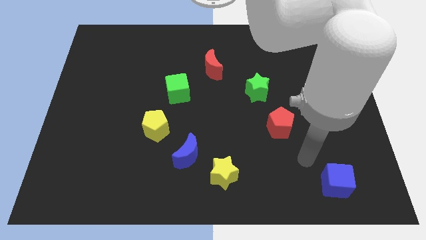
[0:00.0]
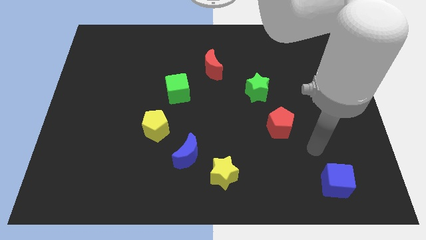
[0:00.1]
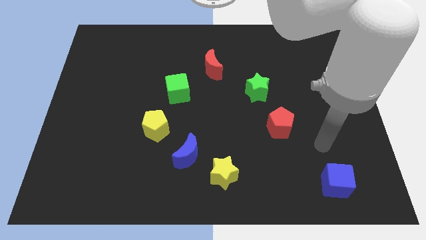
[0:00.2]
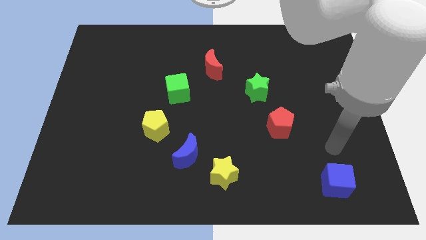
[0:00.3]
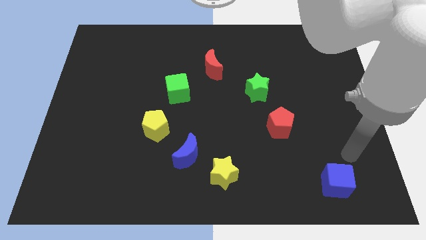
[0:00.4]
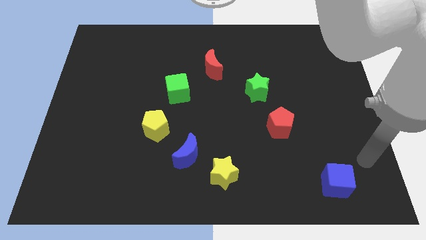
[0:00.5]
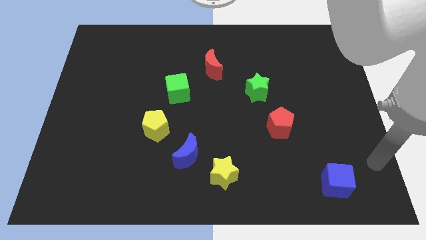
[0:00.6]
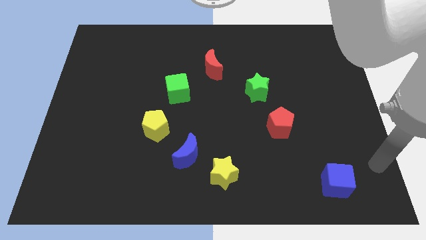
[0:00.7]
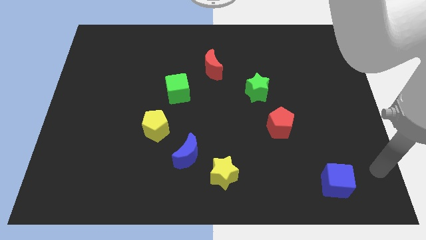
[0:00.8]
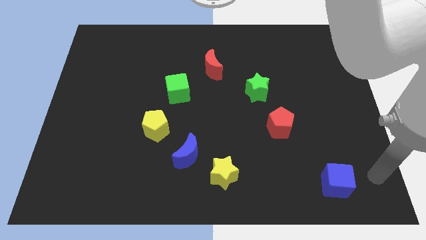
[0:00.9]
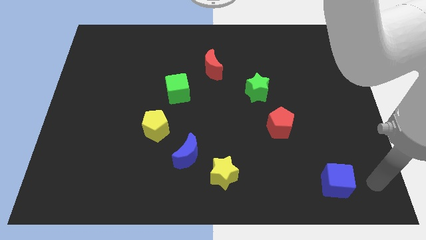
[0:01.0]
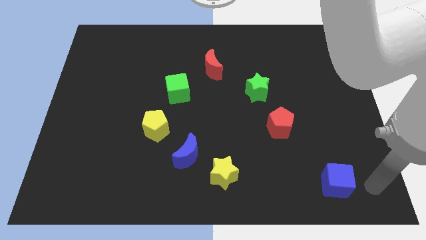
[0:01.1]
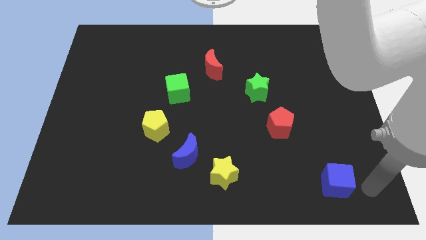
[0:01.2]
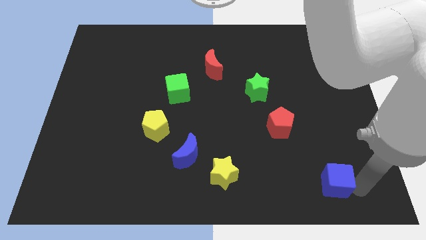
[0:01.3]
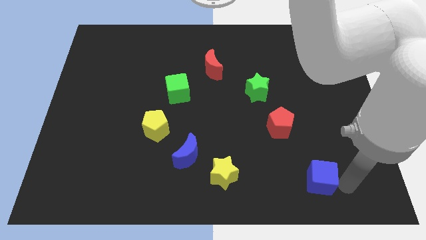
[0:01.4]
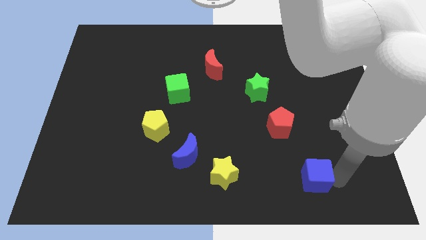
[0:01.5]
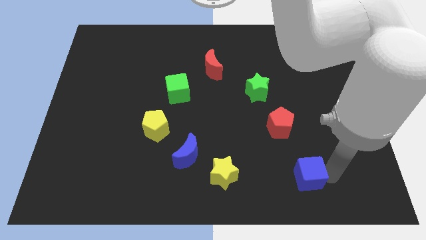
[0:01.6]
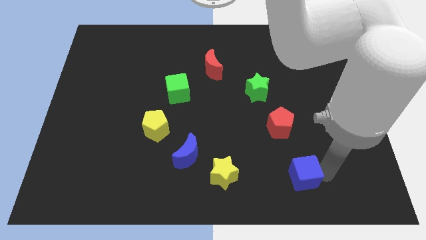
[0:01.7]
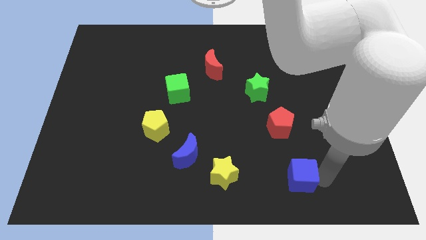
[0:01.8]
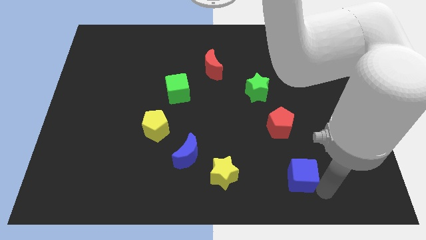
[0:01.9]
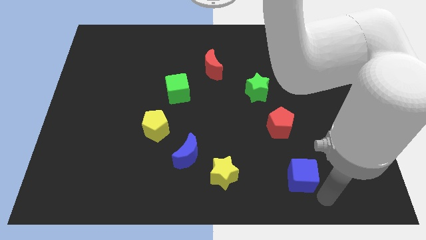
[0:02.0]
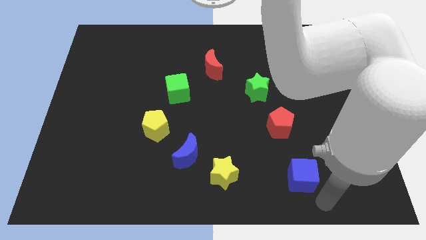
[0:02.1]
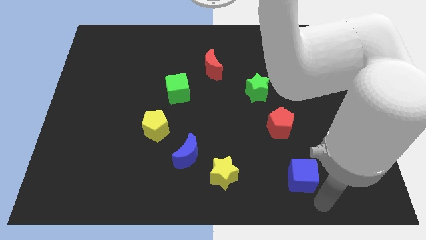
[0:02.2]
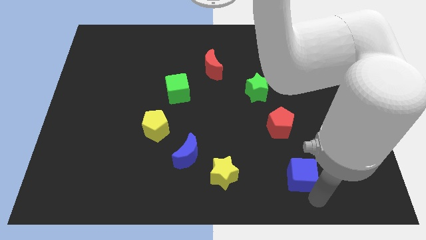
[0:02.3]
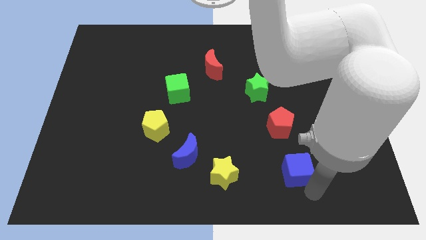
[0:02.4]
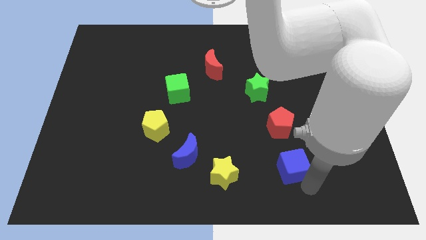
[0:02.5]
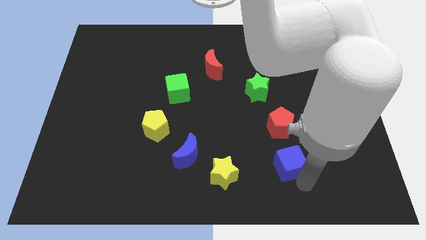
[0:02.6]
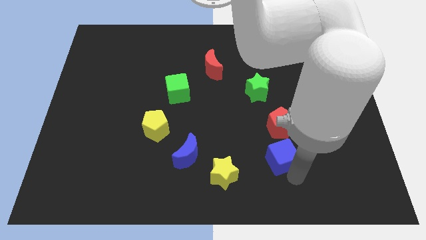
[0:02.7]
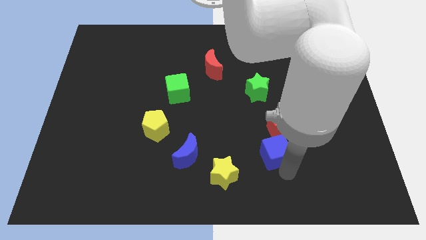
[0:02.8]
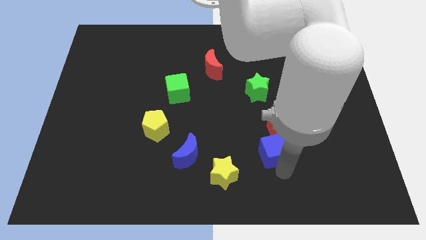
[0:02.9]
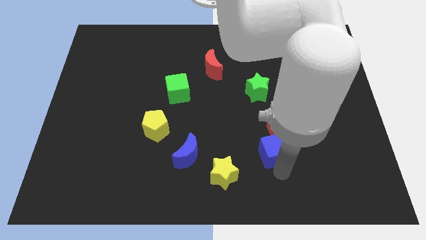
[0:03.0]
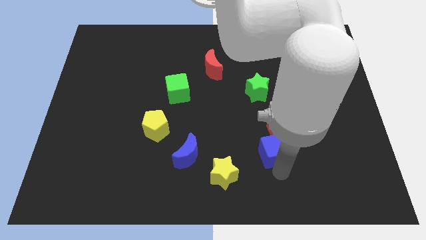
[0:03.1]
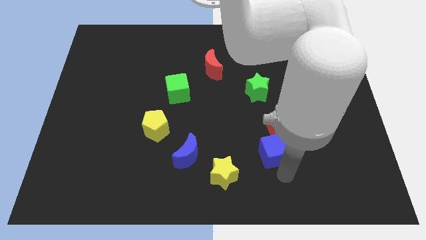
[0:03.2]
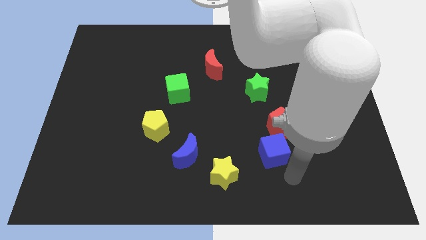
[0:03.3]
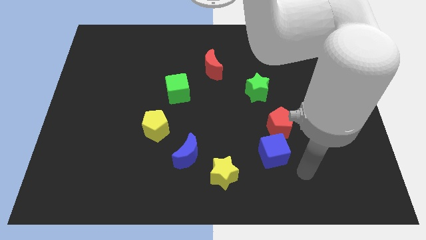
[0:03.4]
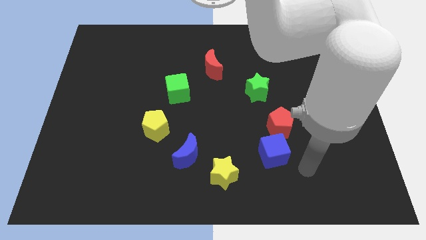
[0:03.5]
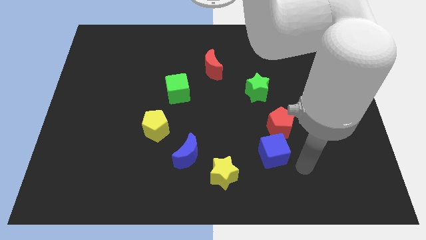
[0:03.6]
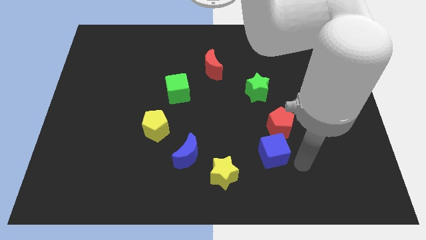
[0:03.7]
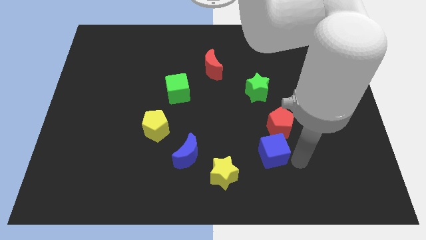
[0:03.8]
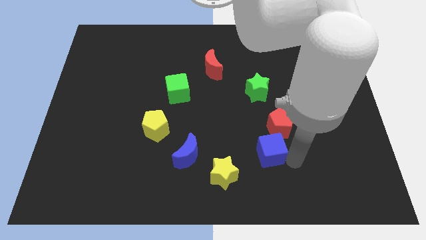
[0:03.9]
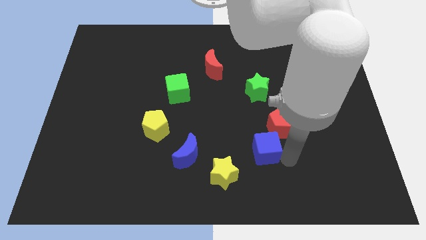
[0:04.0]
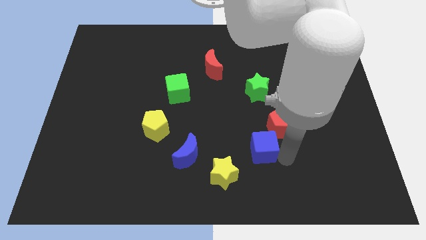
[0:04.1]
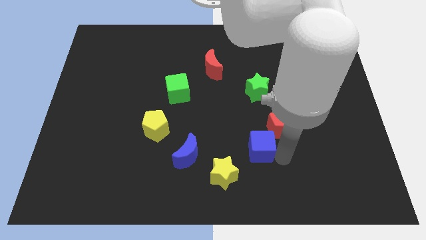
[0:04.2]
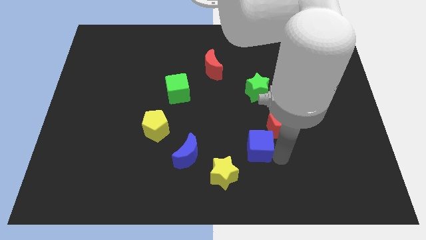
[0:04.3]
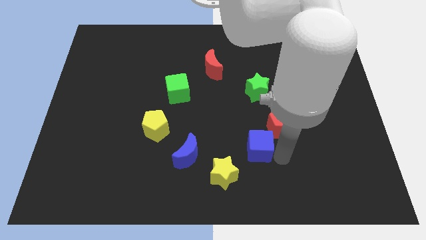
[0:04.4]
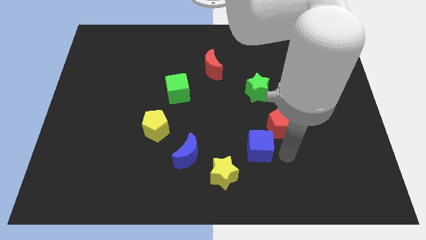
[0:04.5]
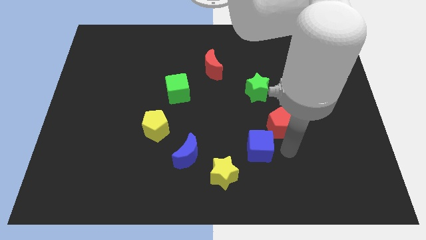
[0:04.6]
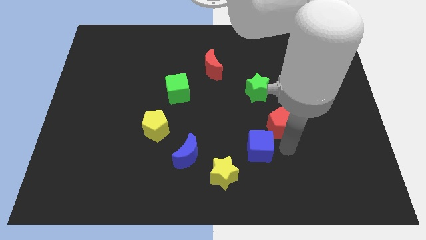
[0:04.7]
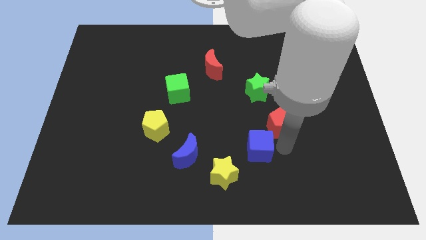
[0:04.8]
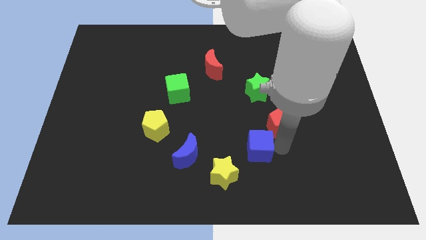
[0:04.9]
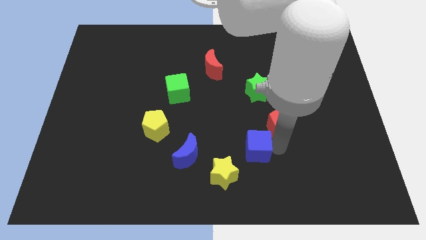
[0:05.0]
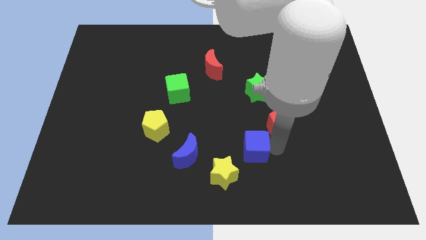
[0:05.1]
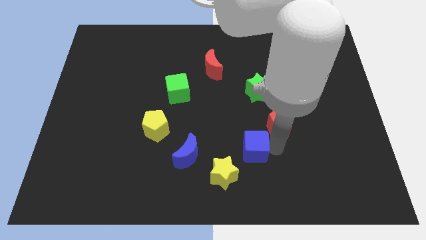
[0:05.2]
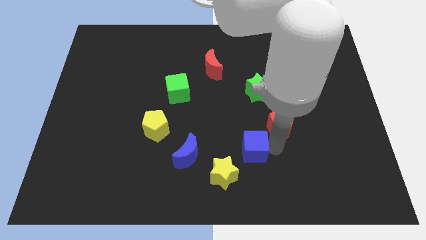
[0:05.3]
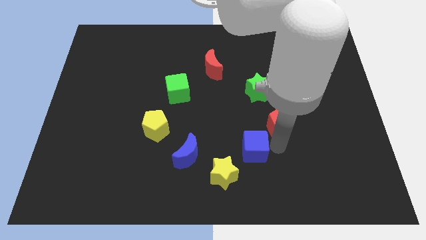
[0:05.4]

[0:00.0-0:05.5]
place the blue cube in between the yellow star and the red pentagon

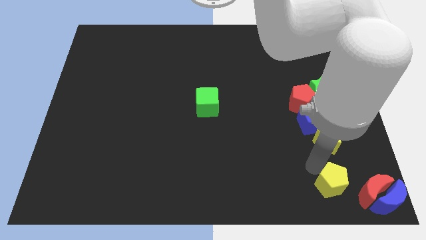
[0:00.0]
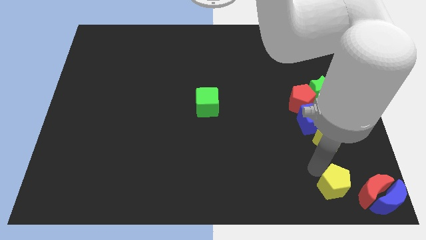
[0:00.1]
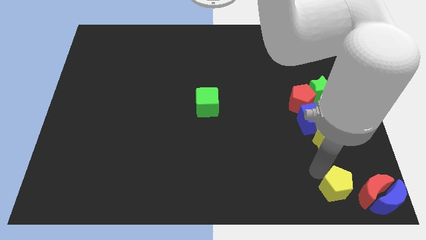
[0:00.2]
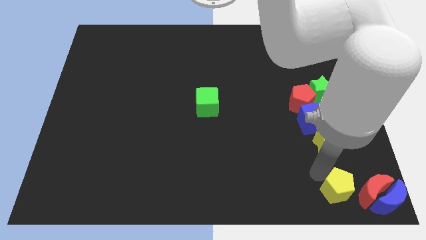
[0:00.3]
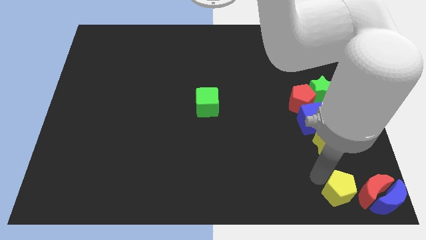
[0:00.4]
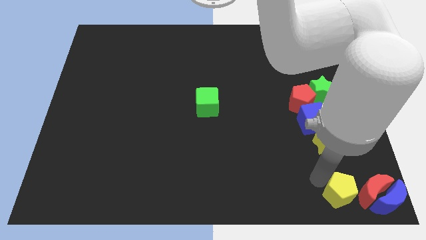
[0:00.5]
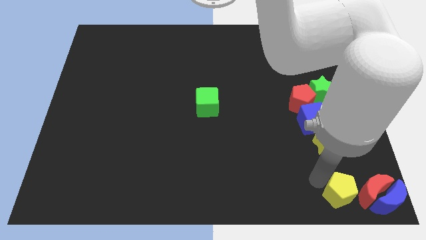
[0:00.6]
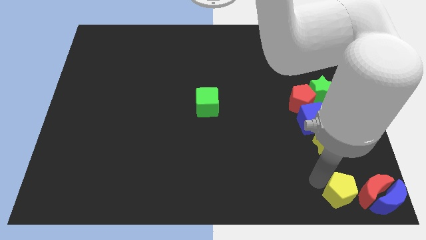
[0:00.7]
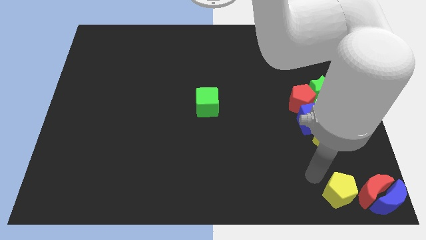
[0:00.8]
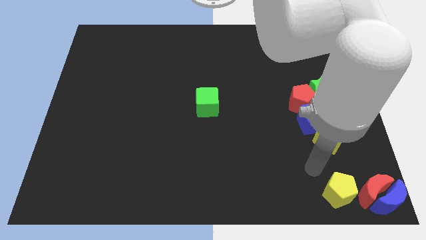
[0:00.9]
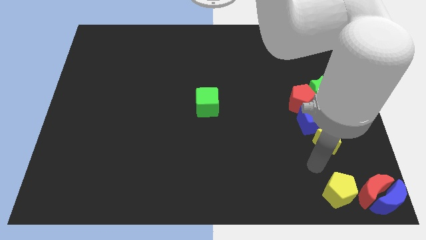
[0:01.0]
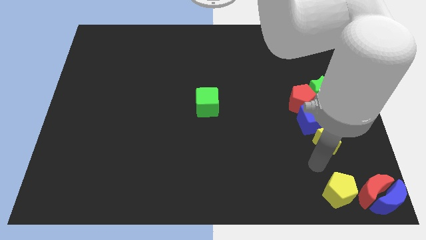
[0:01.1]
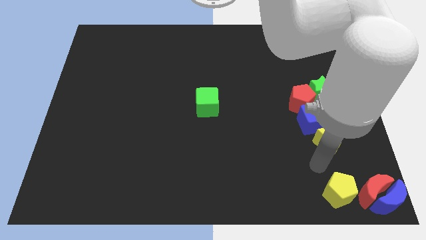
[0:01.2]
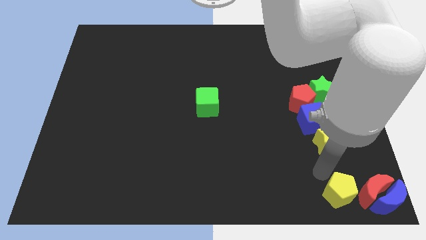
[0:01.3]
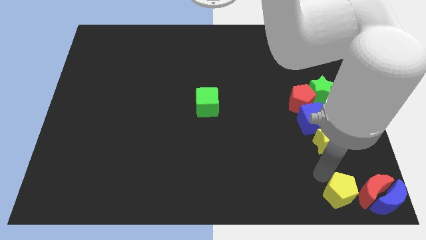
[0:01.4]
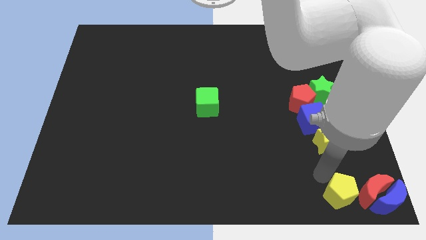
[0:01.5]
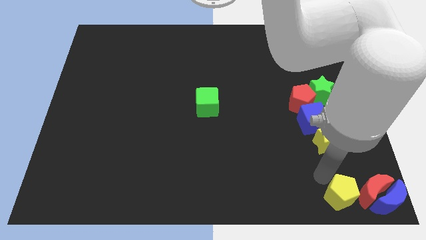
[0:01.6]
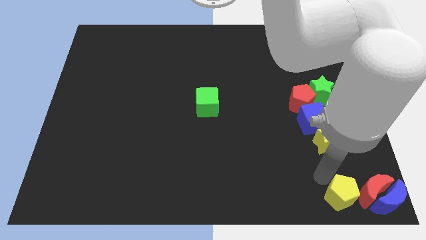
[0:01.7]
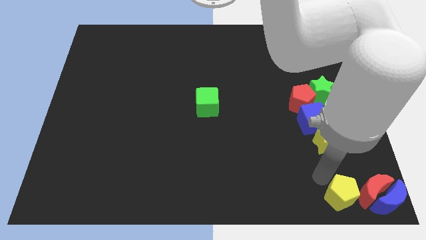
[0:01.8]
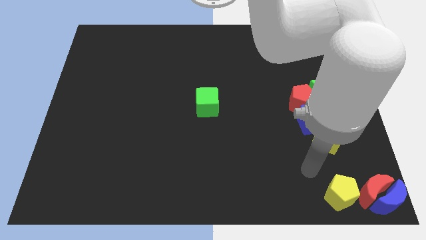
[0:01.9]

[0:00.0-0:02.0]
move the yellow pentagon close to the red moon

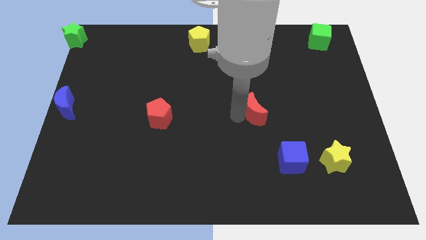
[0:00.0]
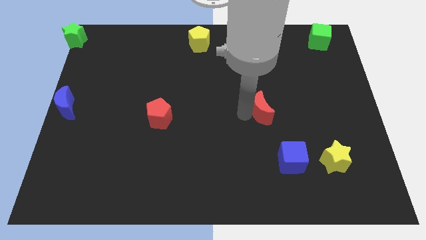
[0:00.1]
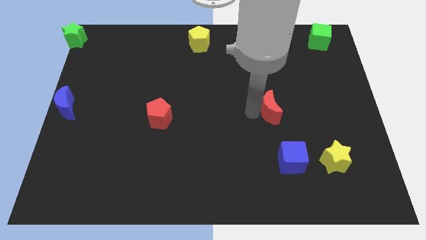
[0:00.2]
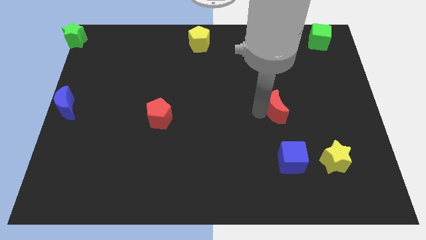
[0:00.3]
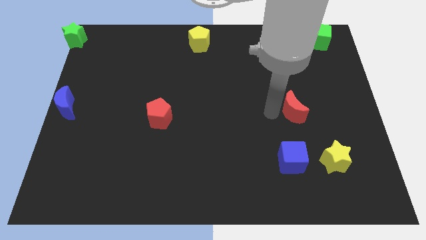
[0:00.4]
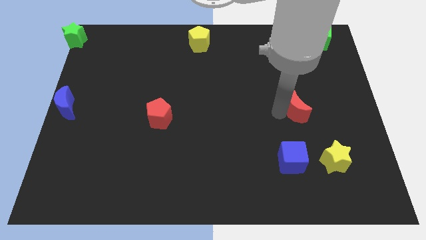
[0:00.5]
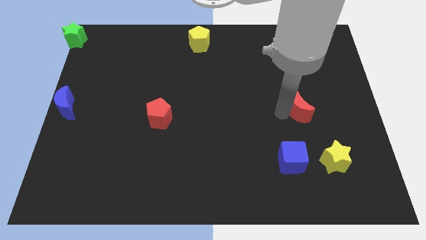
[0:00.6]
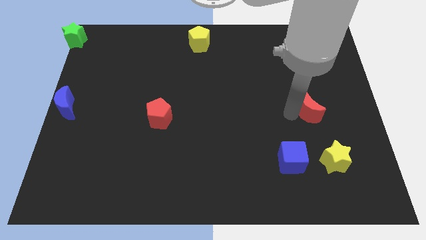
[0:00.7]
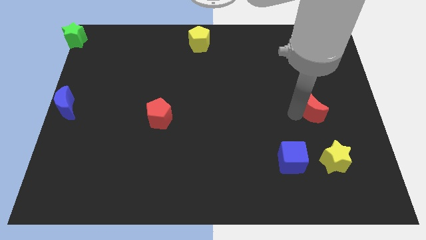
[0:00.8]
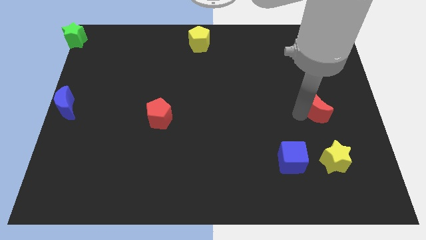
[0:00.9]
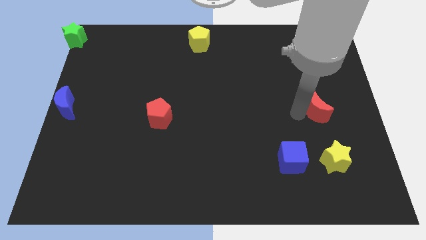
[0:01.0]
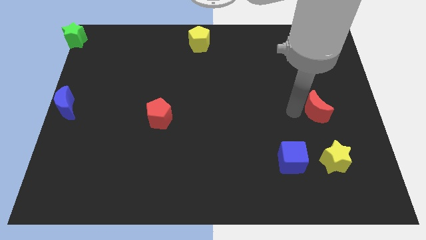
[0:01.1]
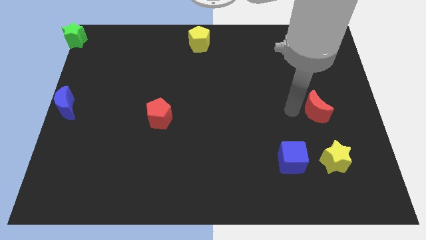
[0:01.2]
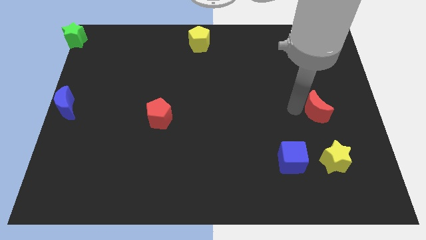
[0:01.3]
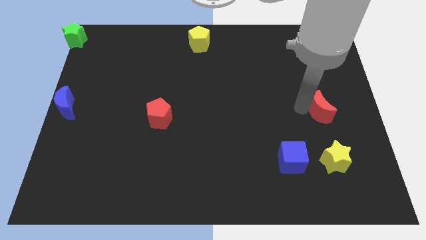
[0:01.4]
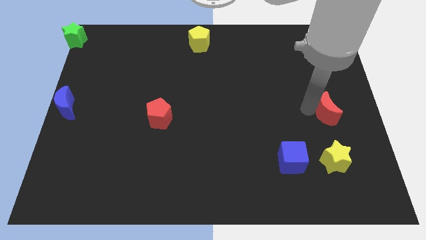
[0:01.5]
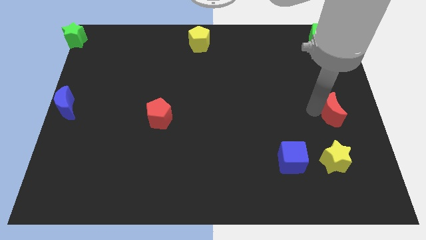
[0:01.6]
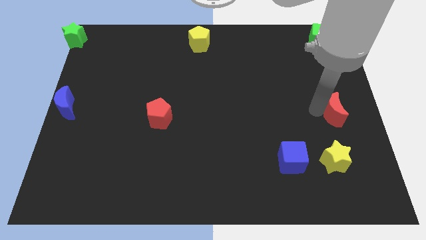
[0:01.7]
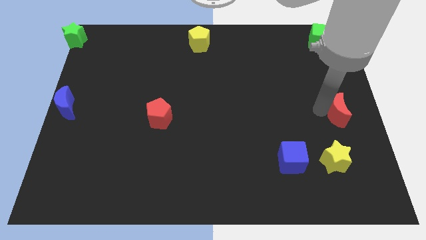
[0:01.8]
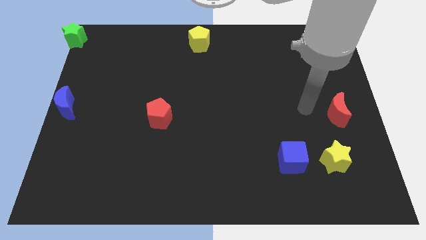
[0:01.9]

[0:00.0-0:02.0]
push the red moon vertically below the green cube
